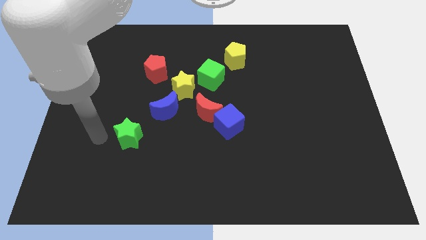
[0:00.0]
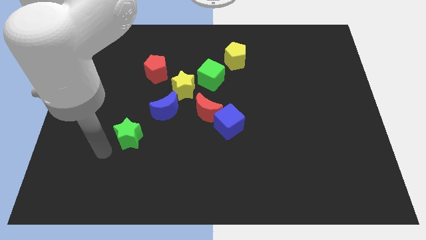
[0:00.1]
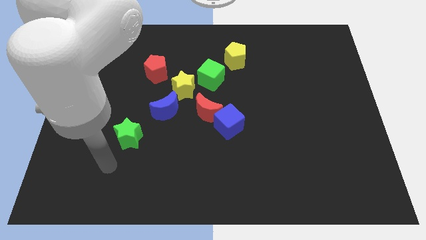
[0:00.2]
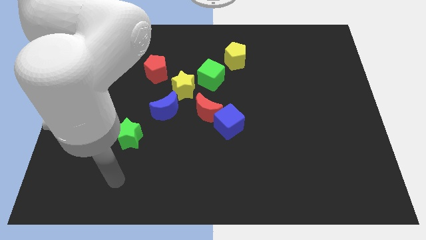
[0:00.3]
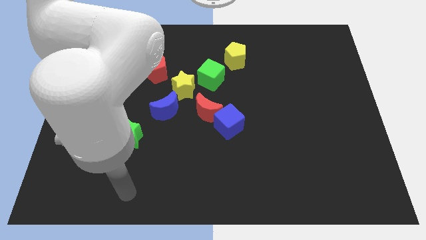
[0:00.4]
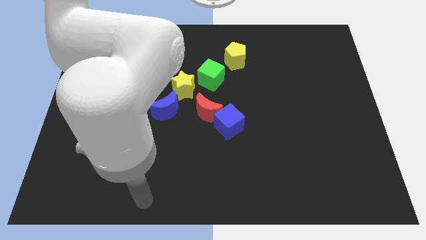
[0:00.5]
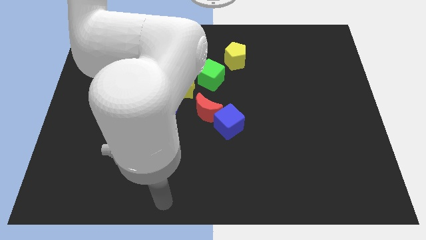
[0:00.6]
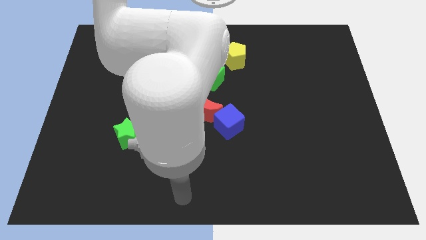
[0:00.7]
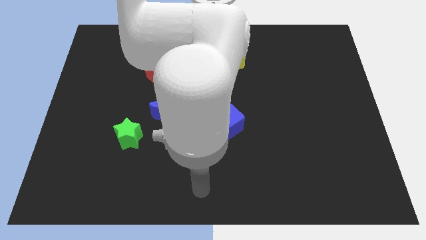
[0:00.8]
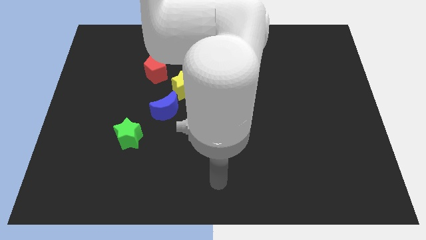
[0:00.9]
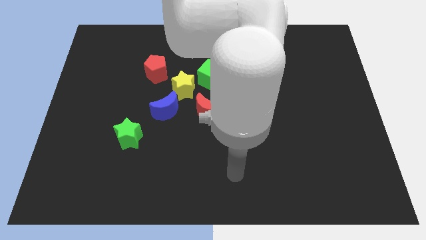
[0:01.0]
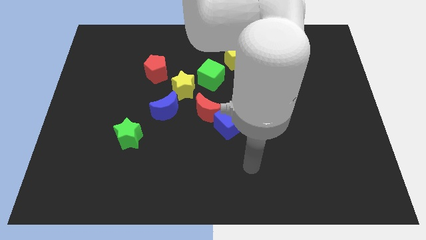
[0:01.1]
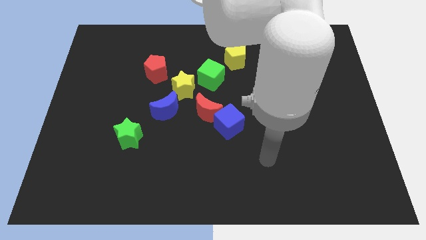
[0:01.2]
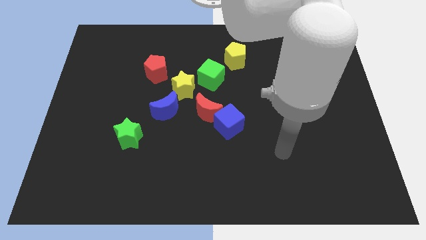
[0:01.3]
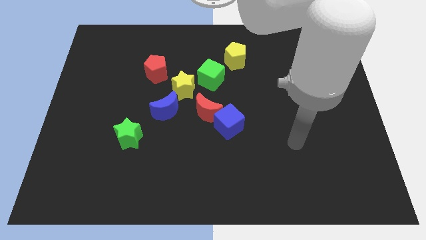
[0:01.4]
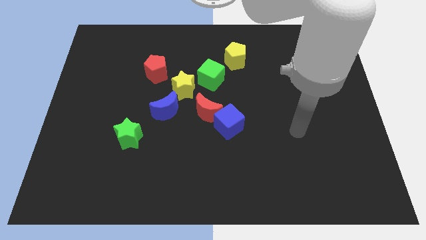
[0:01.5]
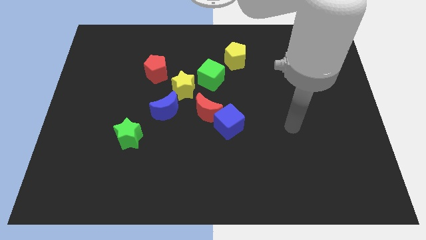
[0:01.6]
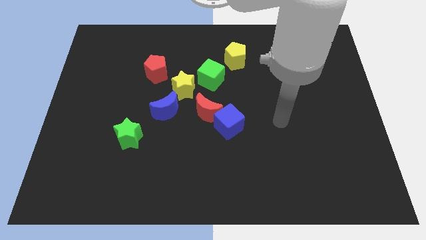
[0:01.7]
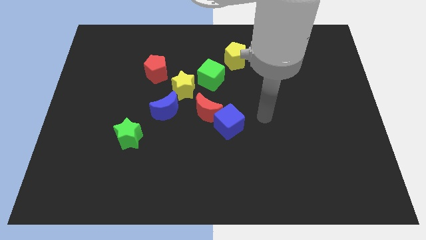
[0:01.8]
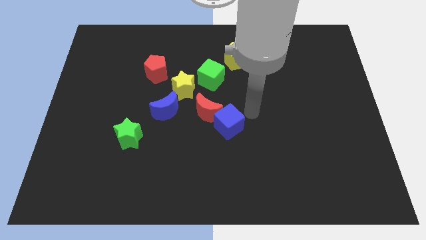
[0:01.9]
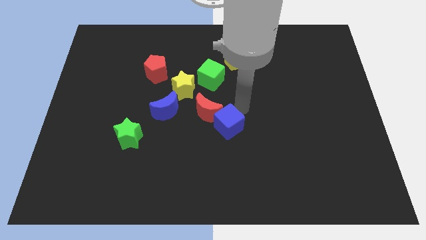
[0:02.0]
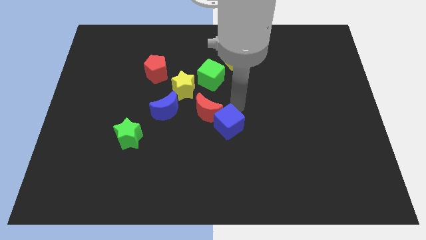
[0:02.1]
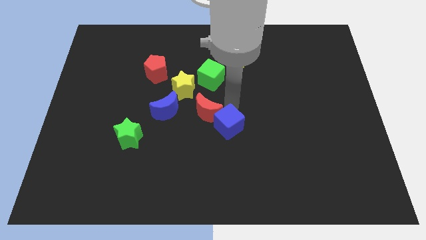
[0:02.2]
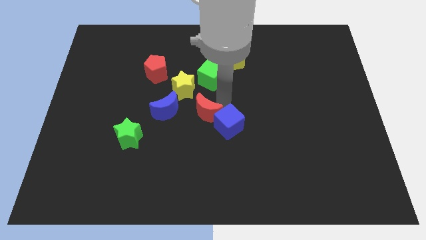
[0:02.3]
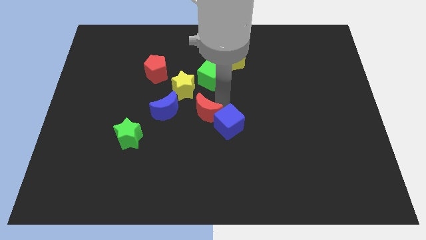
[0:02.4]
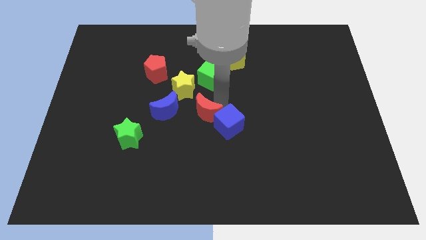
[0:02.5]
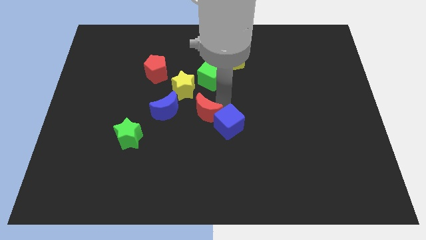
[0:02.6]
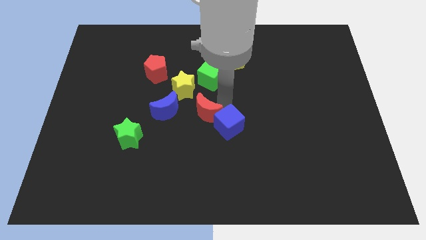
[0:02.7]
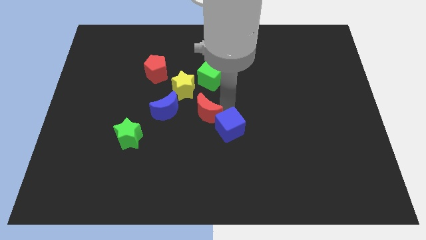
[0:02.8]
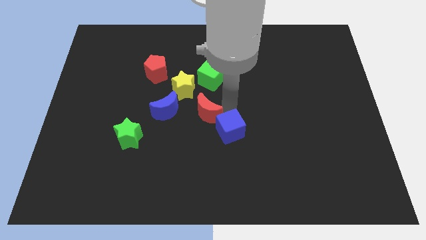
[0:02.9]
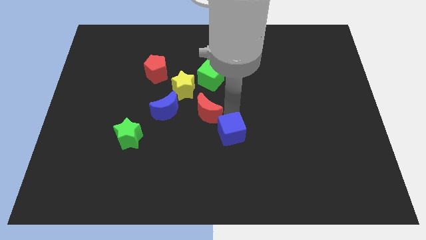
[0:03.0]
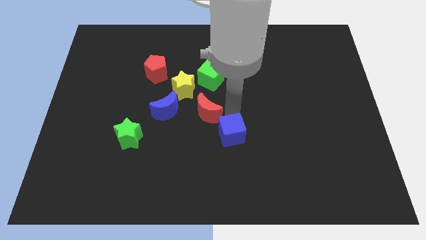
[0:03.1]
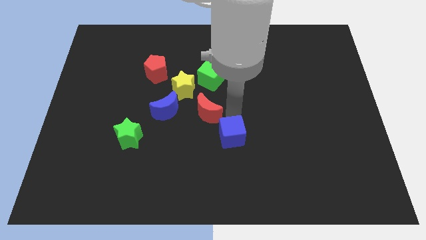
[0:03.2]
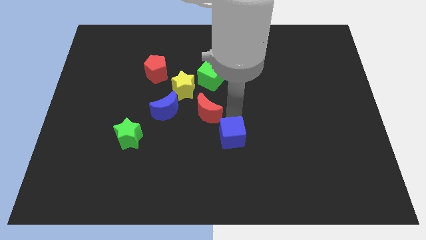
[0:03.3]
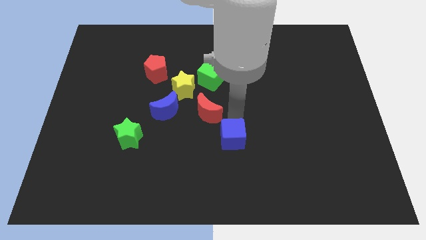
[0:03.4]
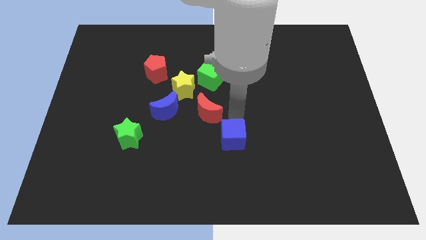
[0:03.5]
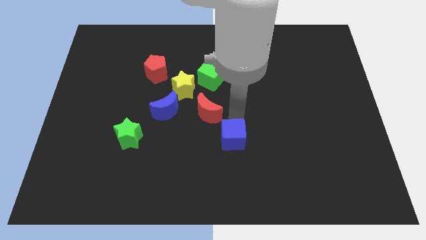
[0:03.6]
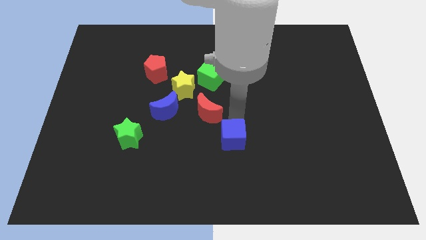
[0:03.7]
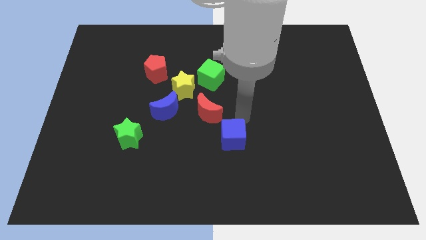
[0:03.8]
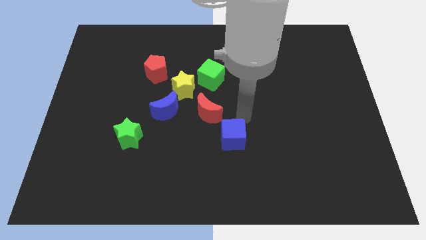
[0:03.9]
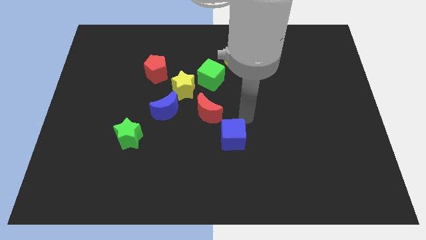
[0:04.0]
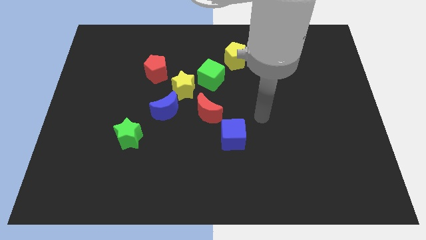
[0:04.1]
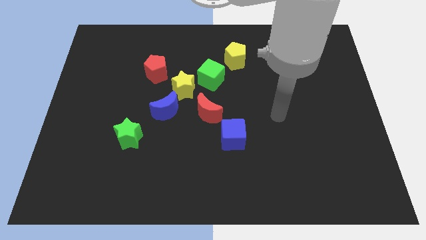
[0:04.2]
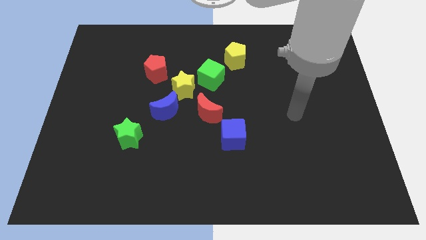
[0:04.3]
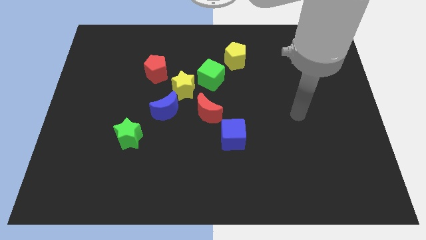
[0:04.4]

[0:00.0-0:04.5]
separate the blue cube from the red crescent

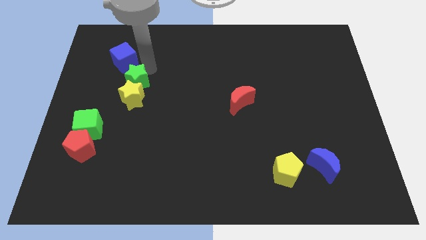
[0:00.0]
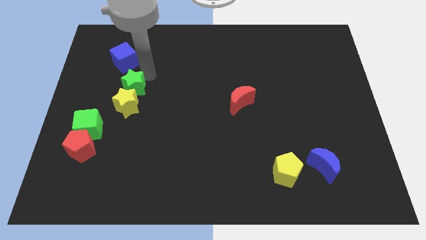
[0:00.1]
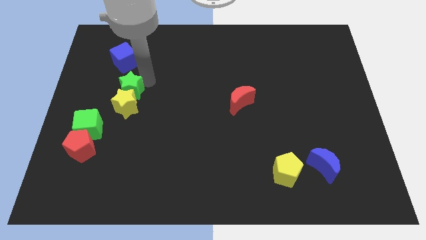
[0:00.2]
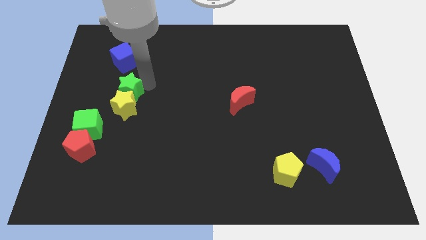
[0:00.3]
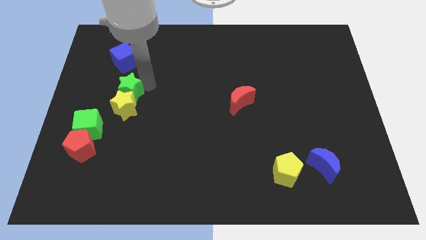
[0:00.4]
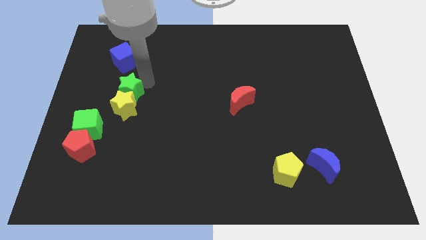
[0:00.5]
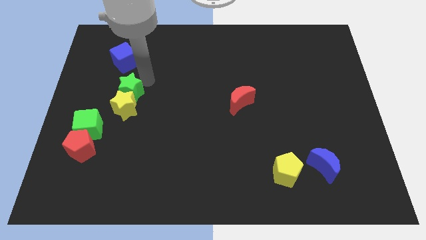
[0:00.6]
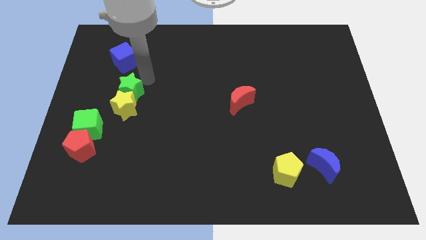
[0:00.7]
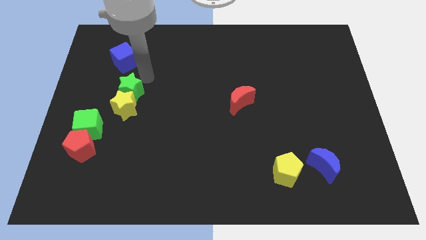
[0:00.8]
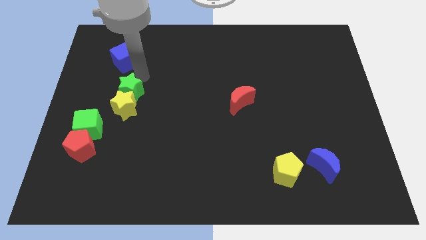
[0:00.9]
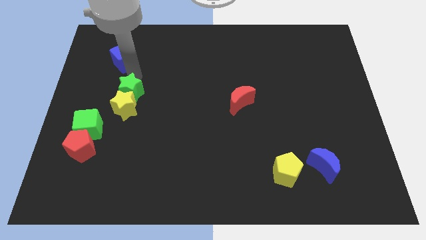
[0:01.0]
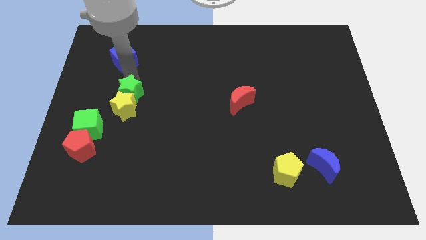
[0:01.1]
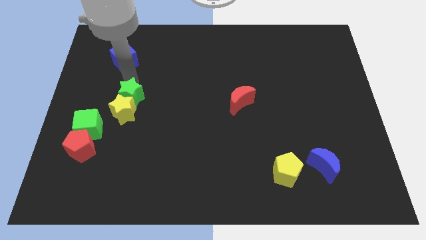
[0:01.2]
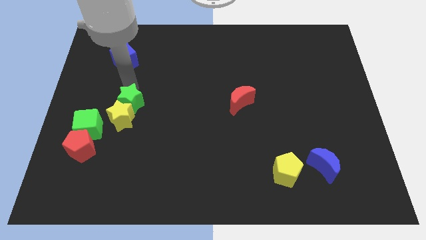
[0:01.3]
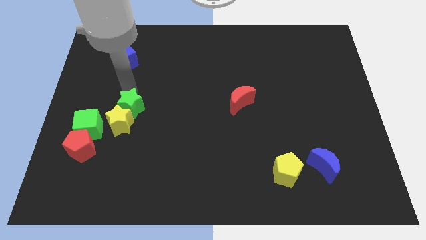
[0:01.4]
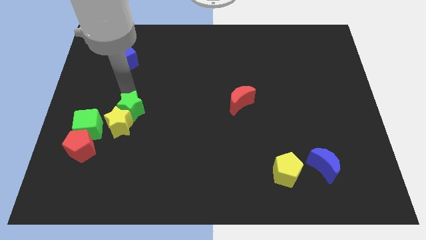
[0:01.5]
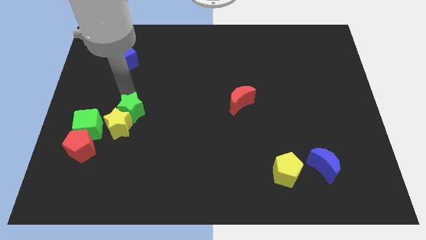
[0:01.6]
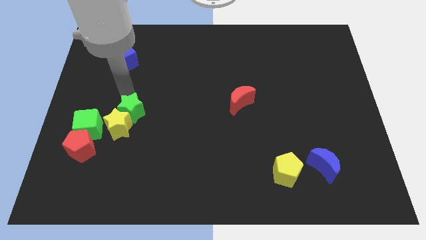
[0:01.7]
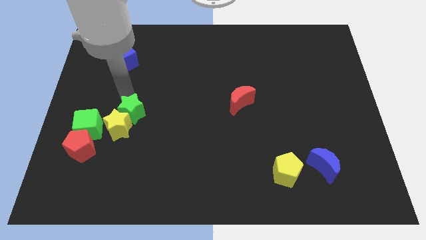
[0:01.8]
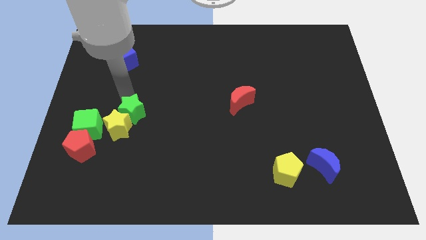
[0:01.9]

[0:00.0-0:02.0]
push the green star and yellow star towards the green cube

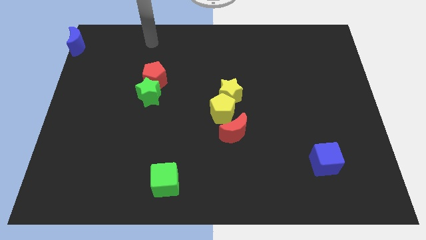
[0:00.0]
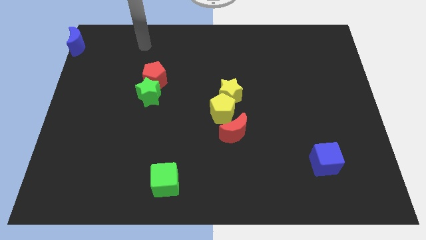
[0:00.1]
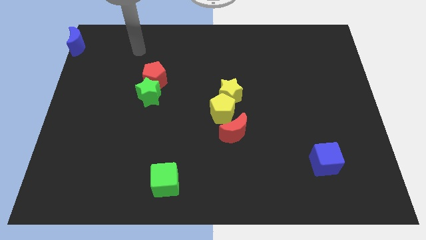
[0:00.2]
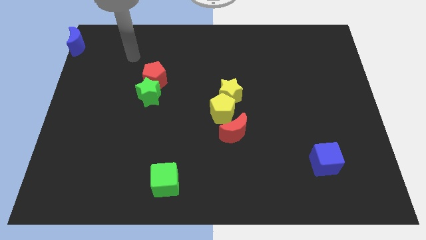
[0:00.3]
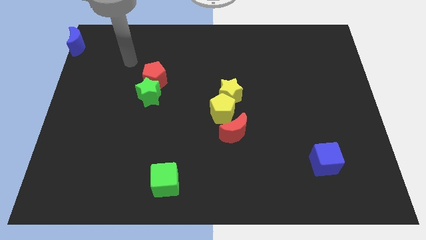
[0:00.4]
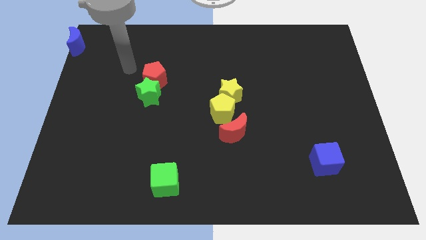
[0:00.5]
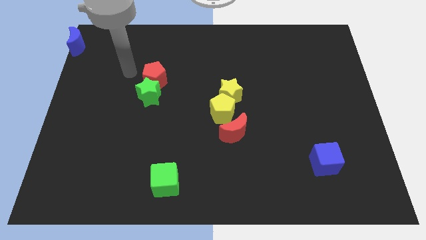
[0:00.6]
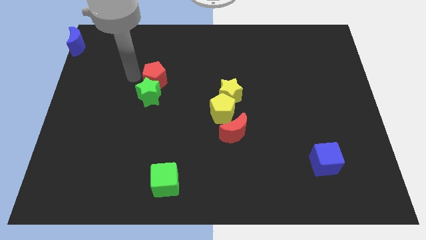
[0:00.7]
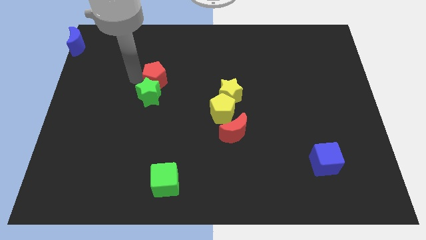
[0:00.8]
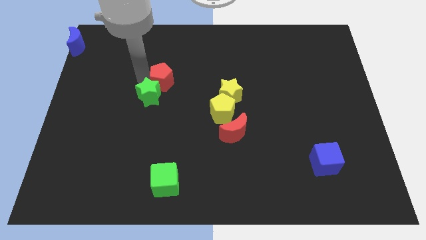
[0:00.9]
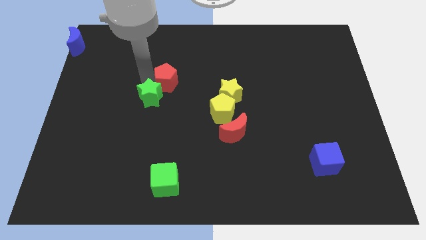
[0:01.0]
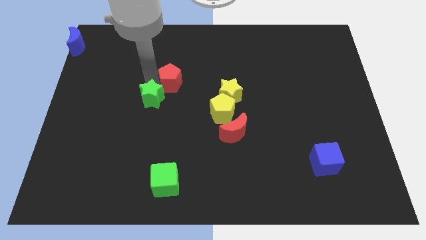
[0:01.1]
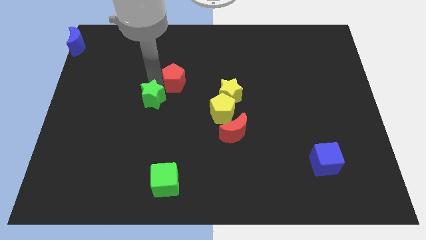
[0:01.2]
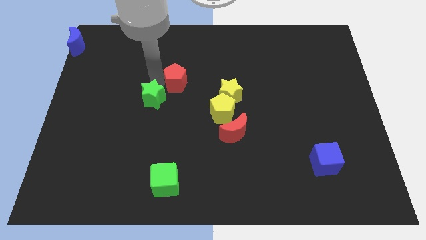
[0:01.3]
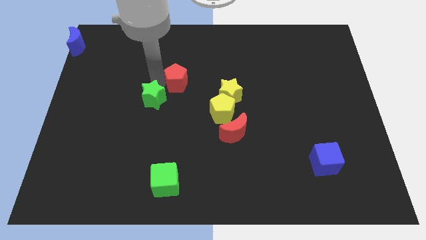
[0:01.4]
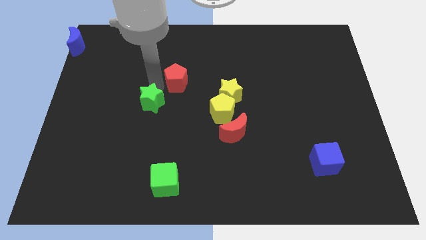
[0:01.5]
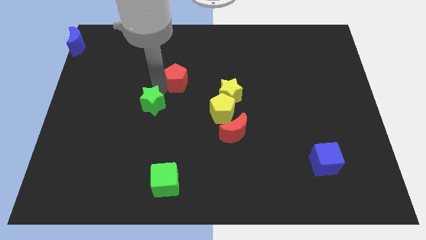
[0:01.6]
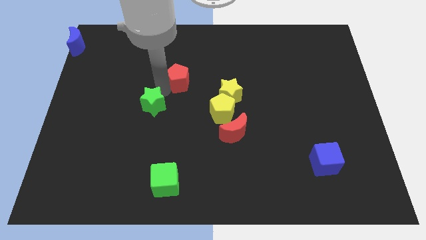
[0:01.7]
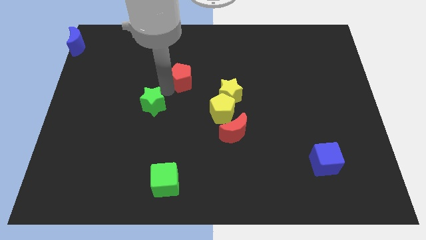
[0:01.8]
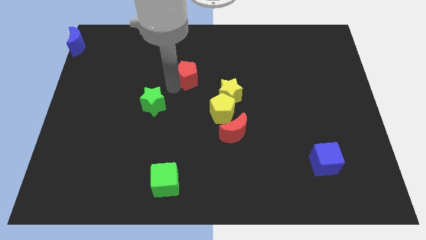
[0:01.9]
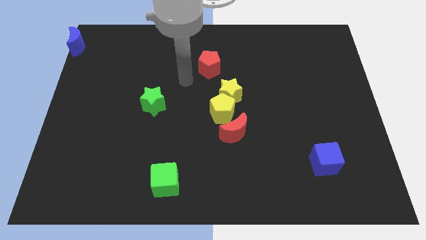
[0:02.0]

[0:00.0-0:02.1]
push the red pentagon on the top left of the yellow star

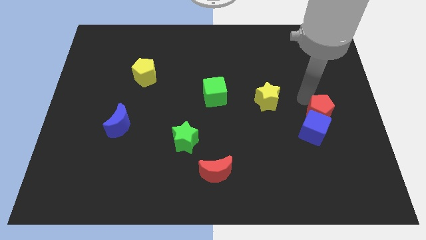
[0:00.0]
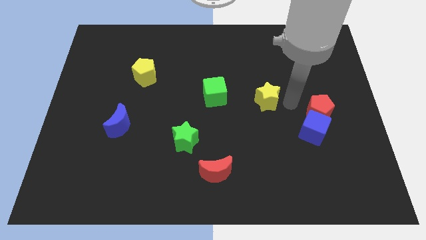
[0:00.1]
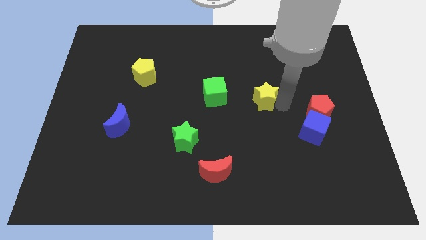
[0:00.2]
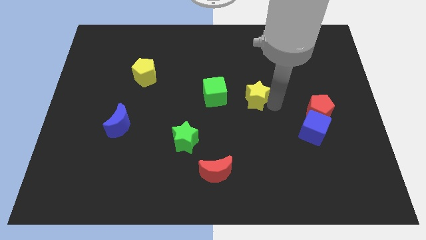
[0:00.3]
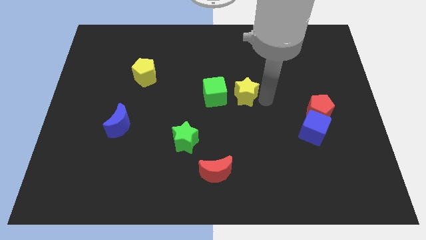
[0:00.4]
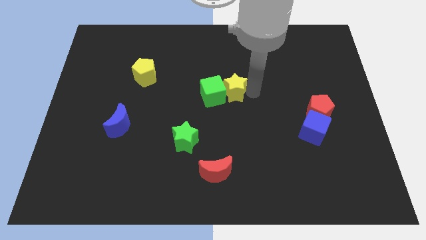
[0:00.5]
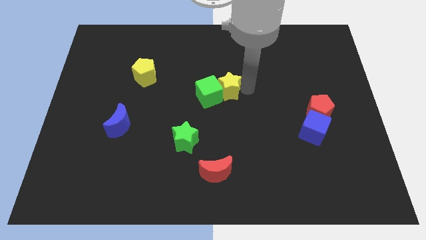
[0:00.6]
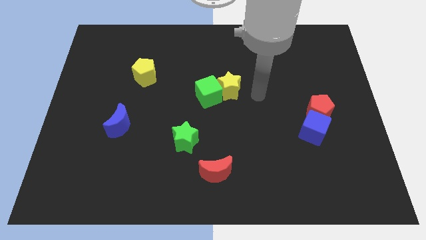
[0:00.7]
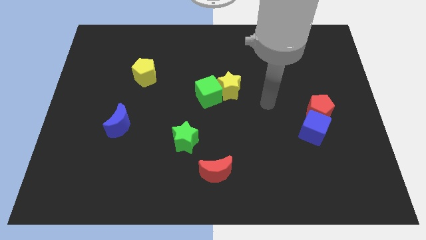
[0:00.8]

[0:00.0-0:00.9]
place the yellow star and green cube at the center of the board
